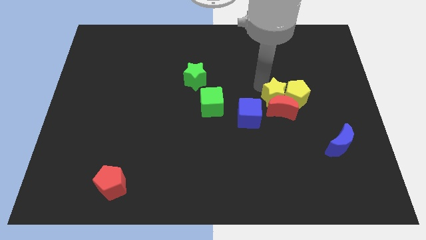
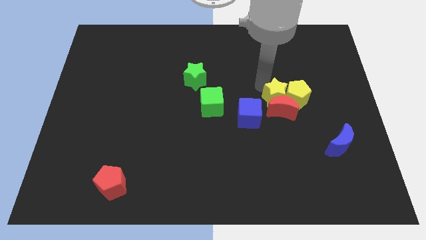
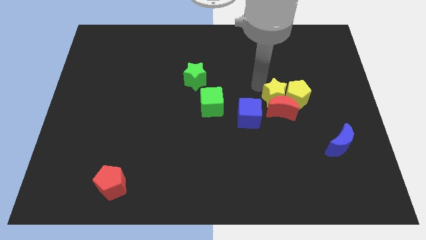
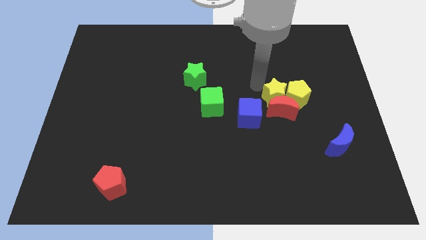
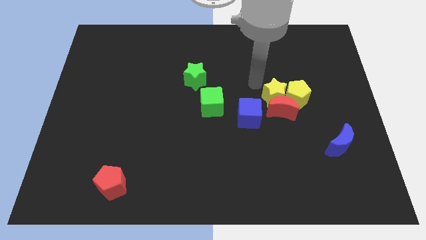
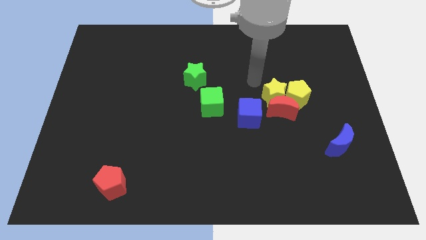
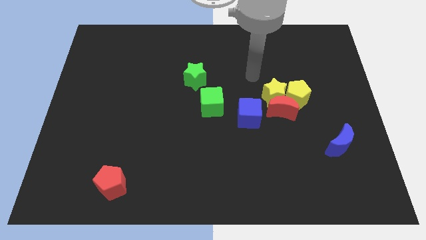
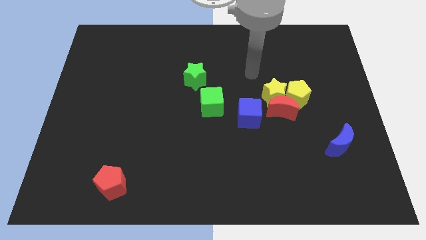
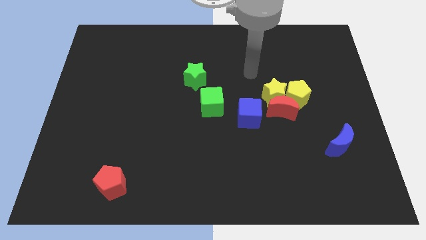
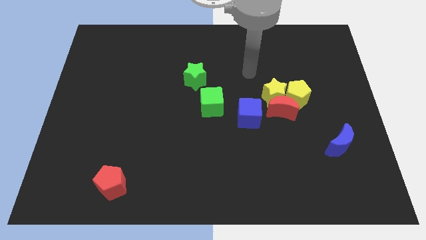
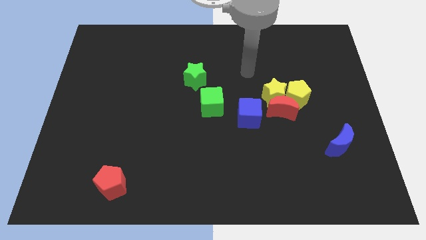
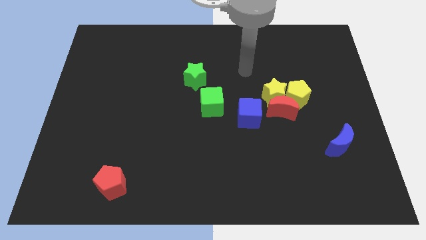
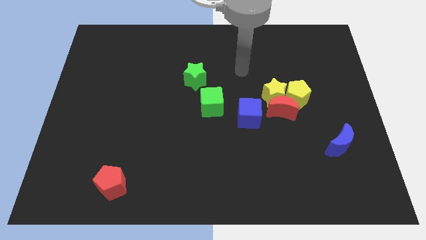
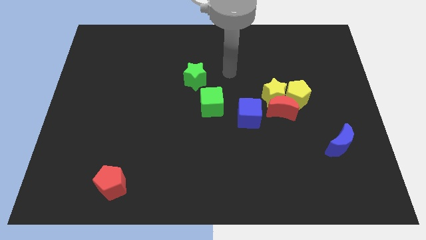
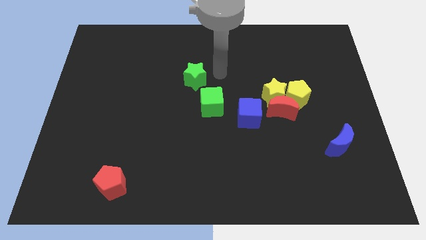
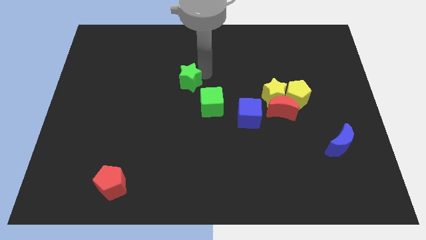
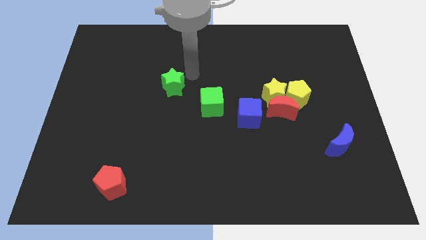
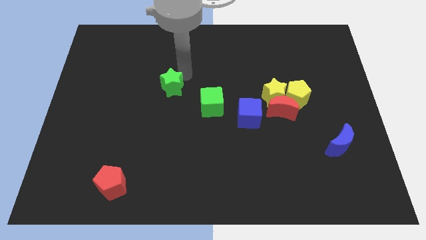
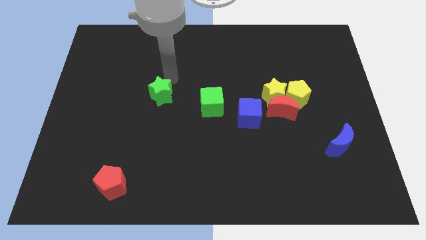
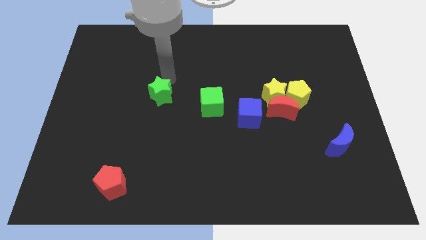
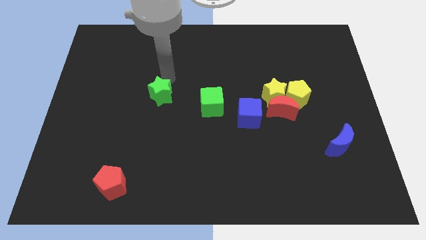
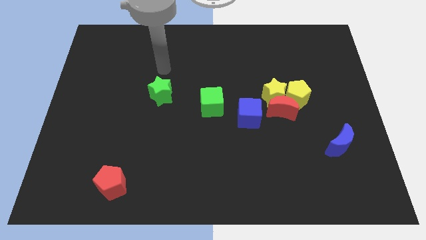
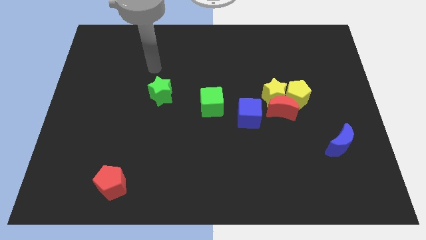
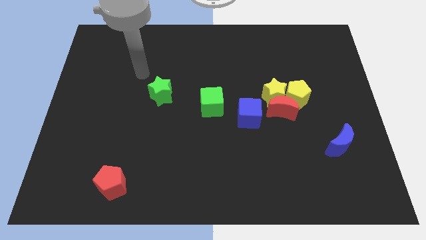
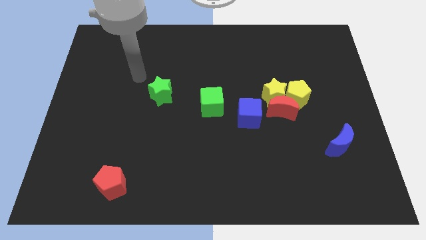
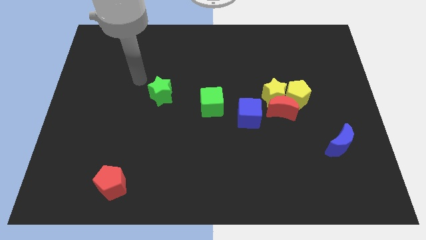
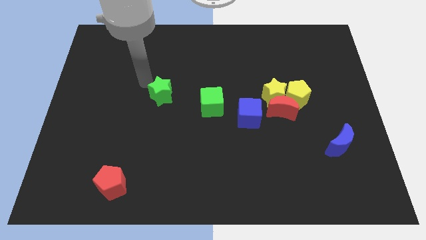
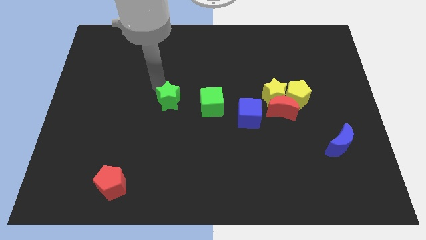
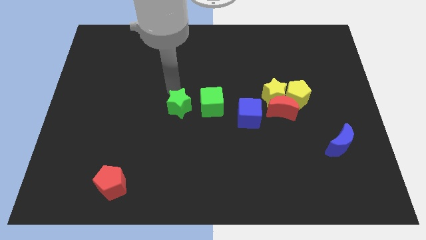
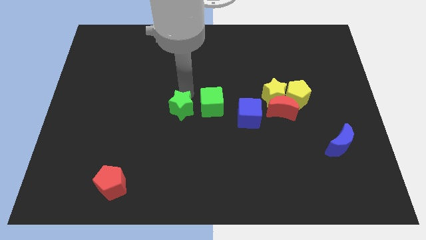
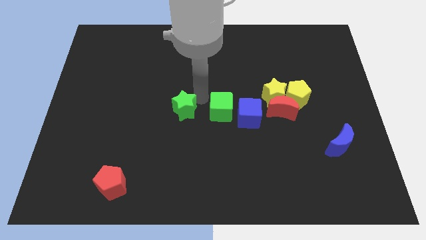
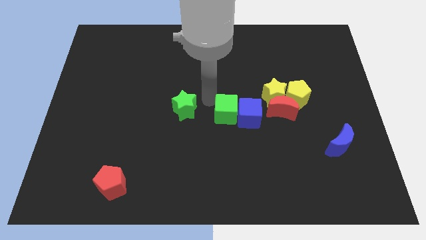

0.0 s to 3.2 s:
put the green star to the left of the green cube

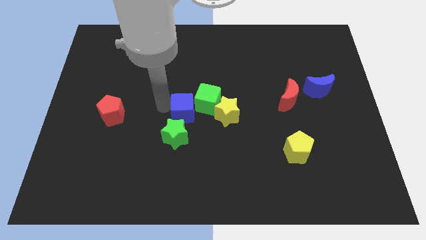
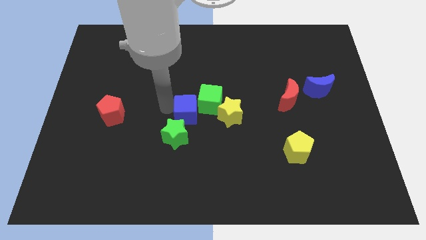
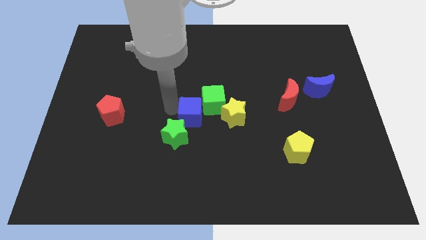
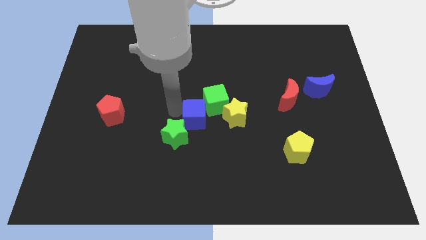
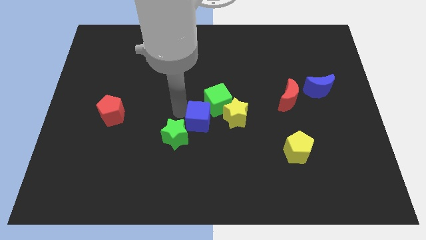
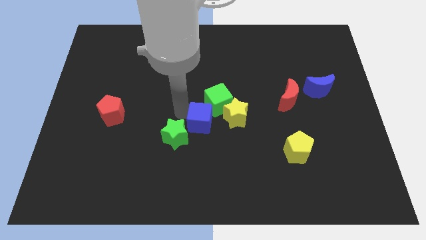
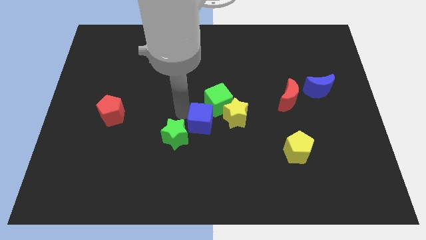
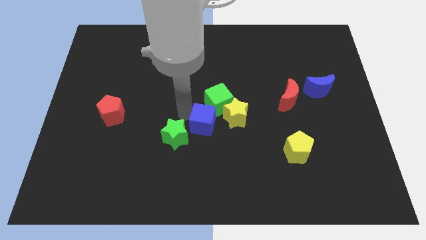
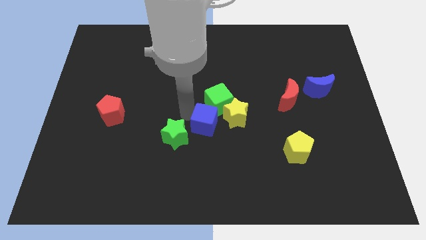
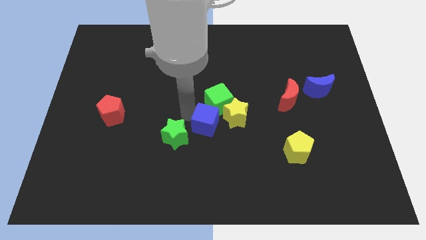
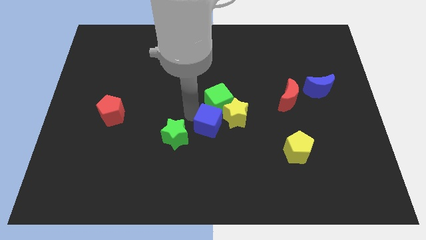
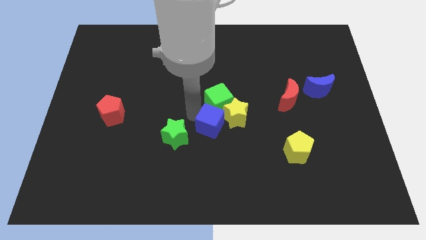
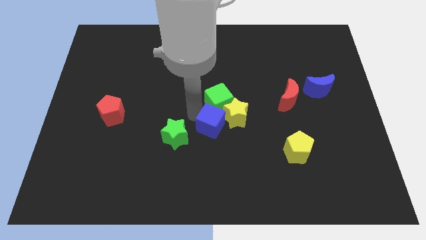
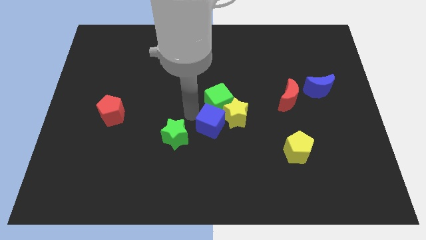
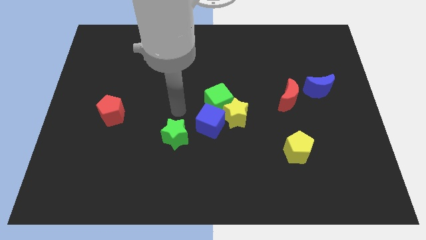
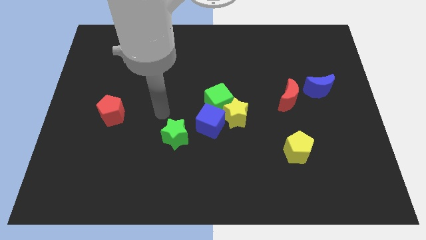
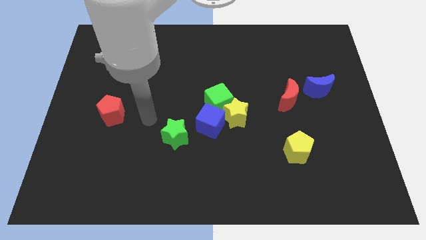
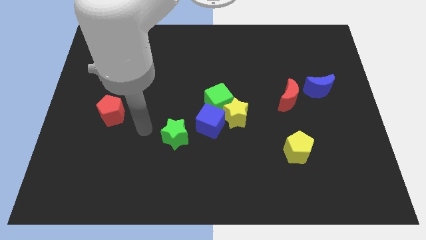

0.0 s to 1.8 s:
slide blue cube to the bottom left side of the green cube

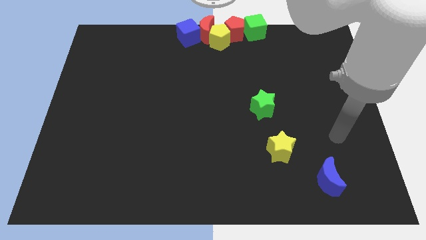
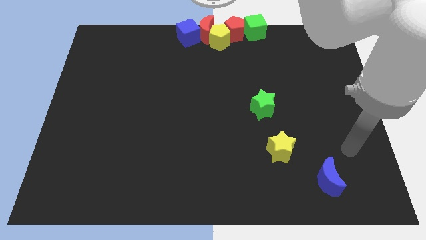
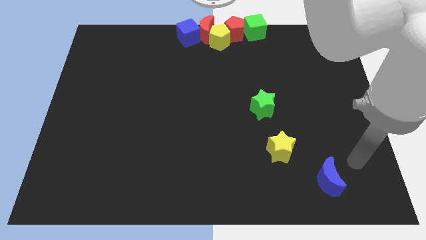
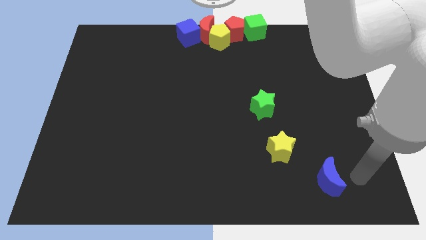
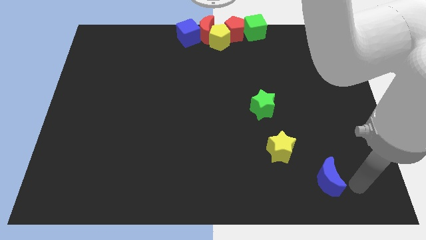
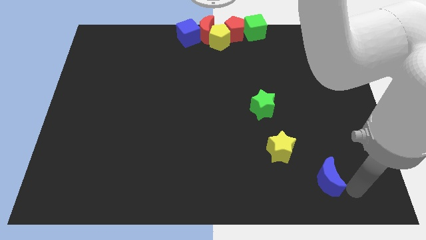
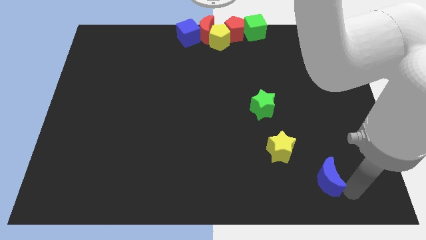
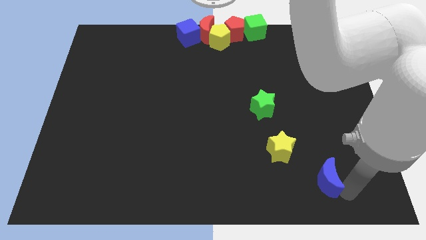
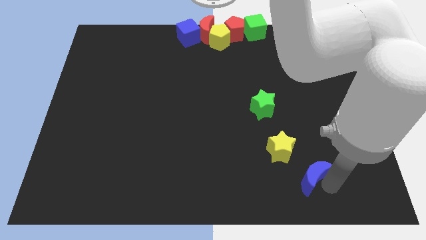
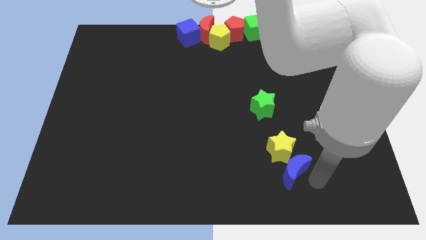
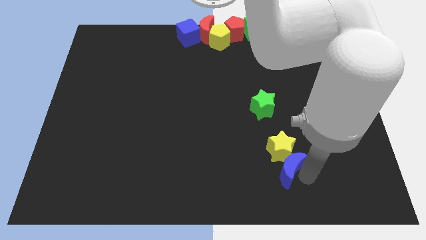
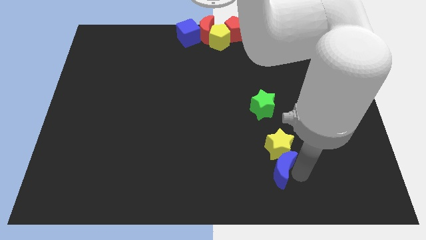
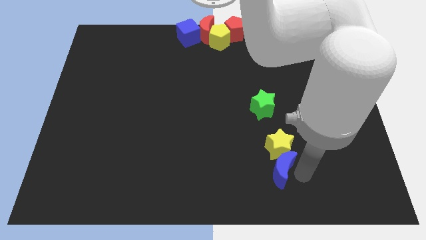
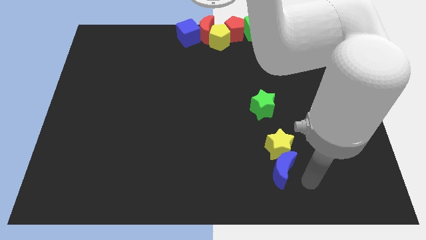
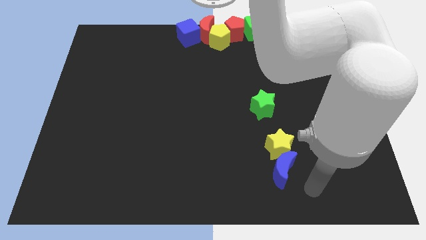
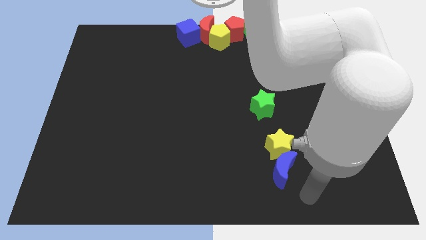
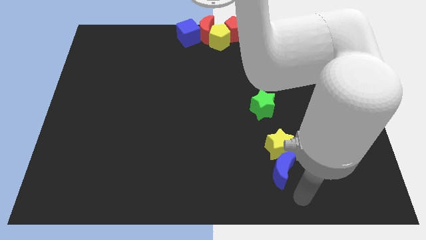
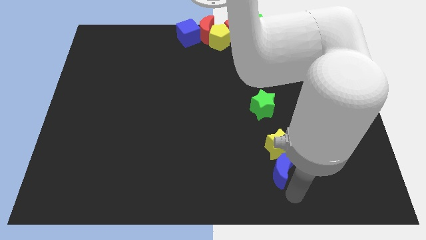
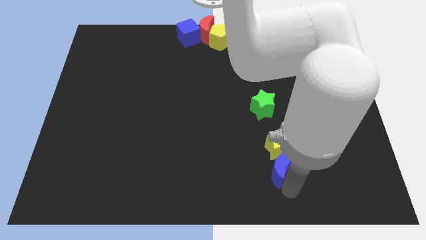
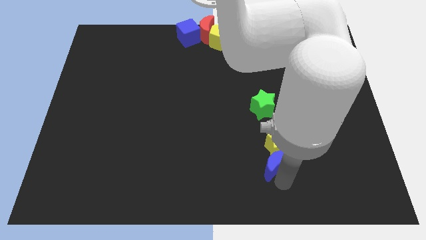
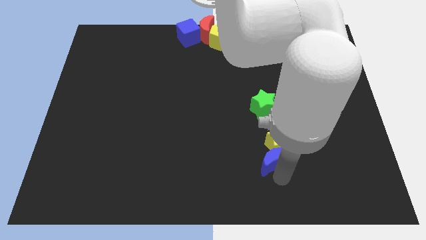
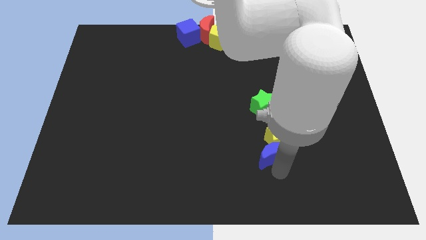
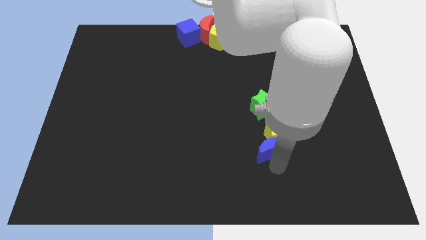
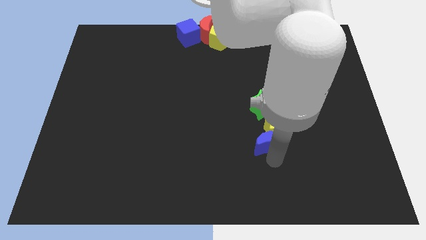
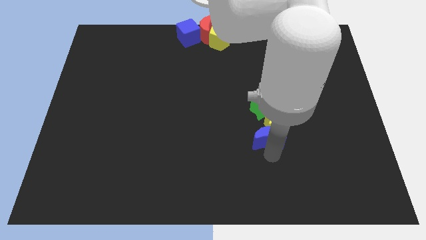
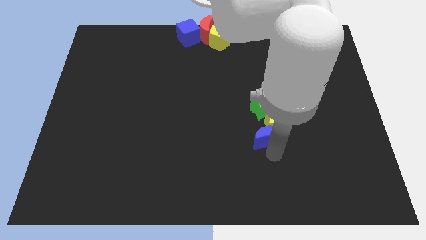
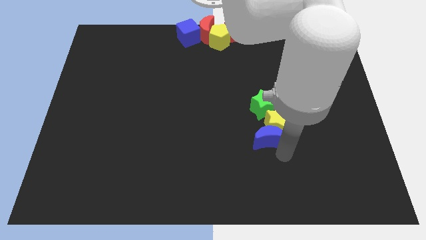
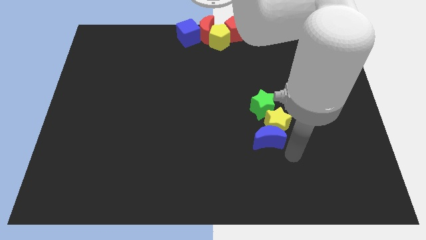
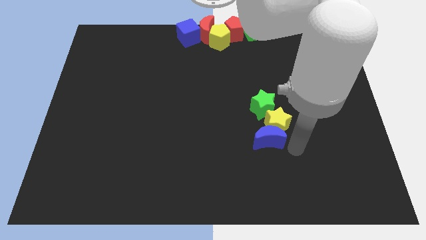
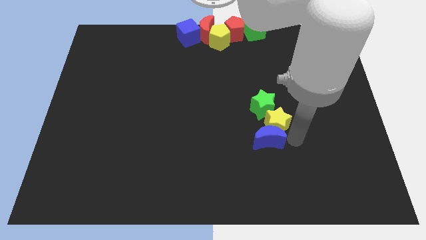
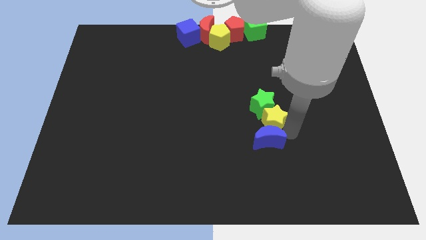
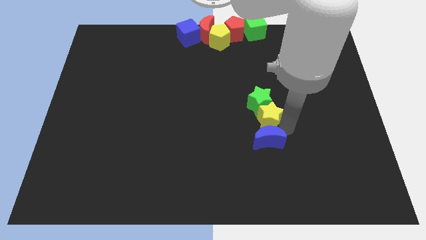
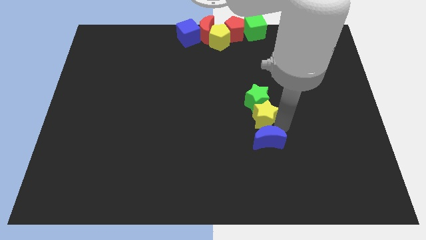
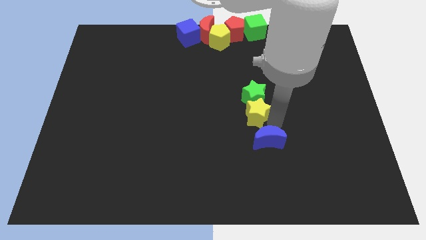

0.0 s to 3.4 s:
push the blue crescent into the yellow star along with the green star

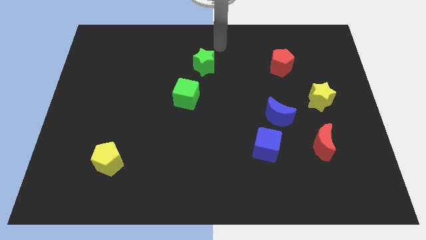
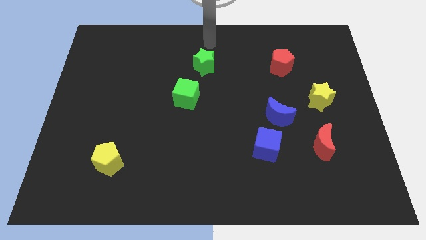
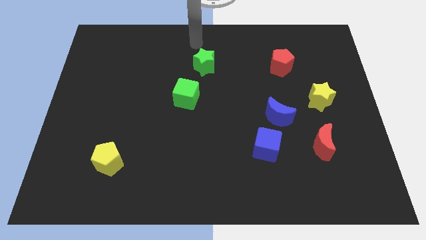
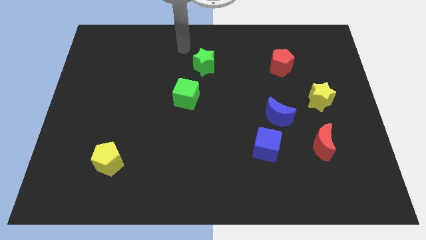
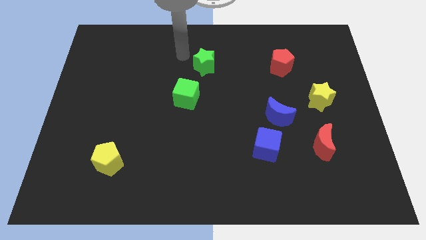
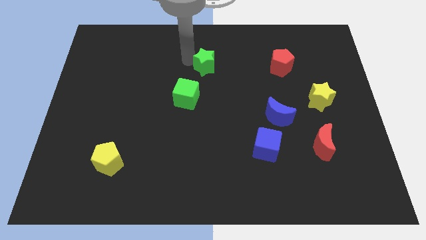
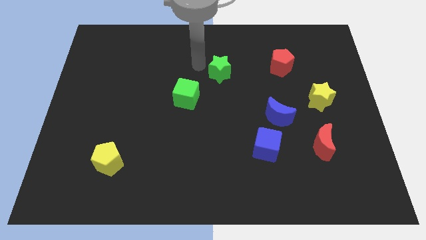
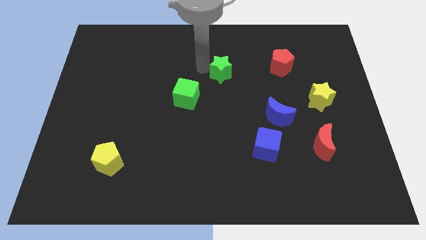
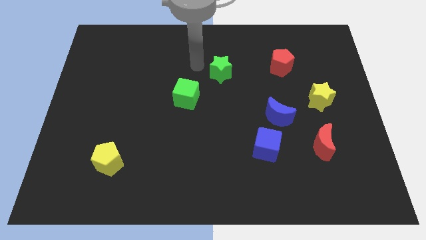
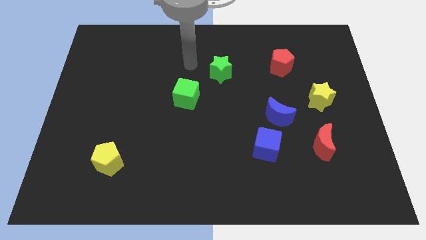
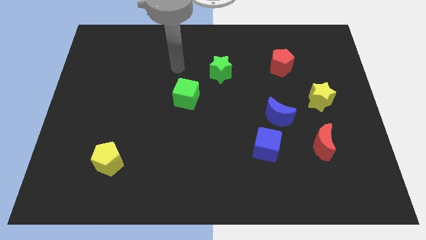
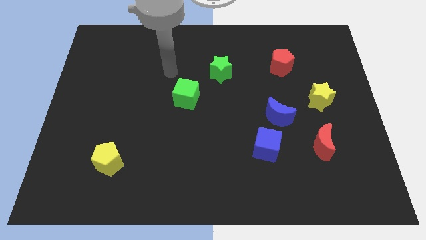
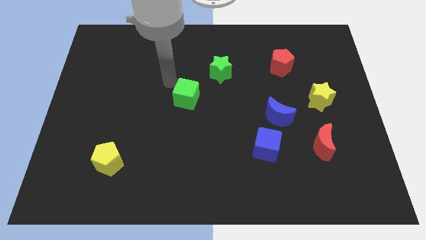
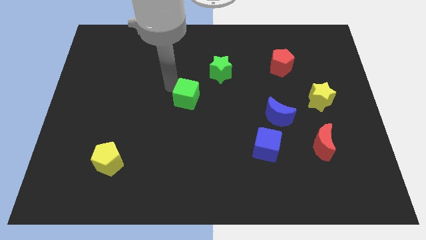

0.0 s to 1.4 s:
place the arm near the green cube
